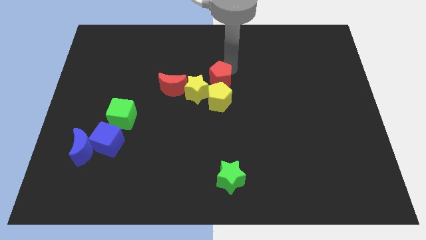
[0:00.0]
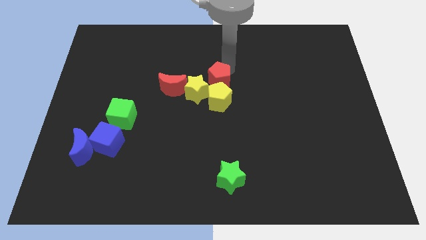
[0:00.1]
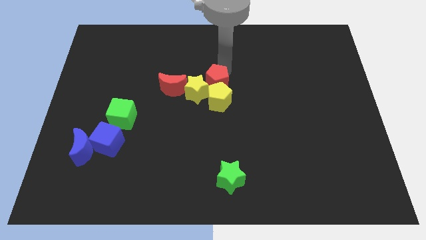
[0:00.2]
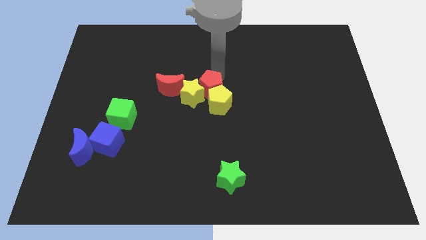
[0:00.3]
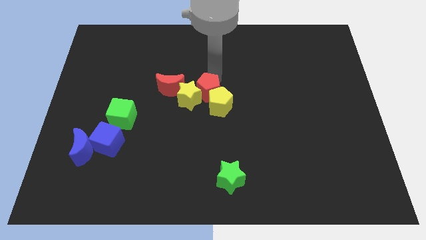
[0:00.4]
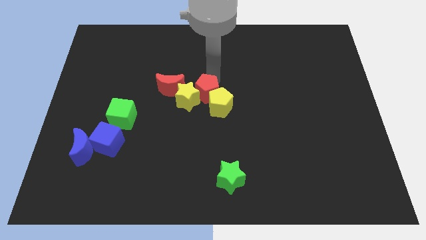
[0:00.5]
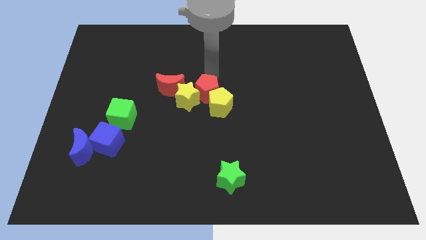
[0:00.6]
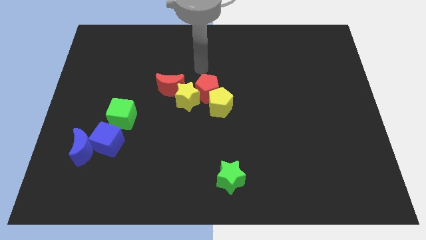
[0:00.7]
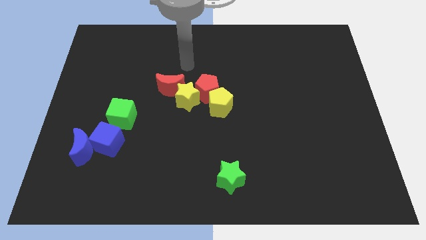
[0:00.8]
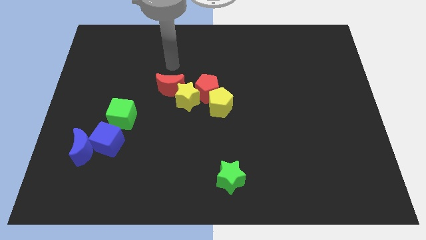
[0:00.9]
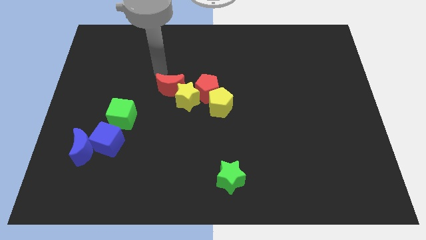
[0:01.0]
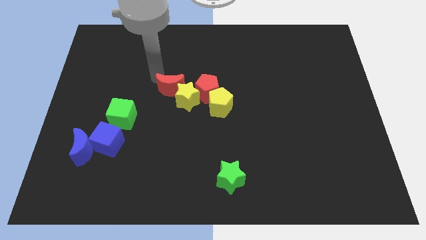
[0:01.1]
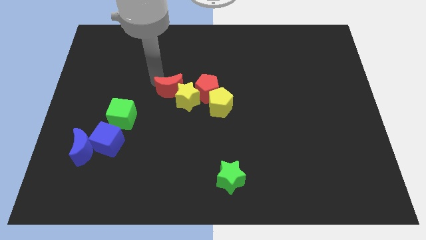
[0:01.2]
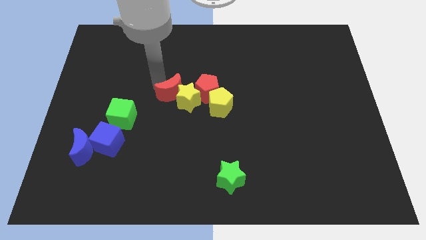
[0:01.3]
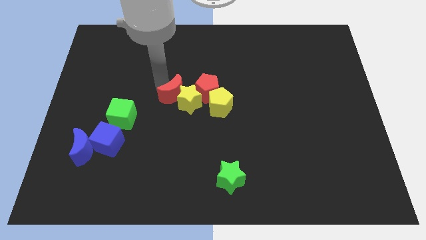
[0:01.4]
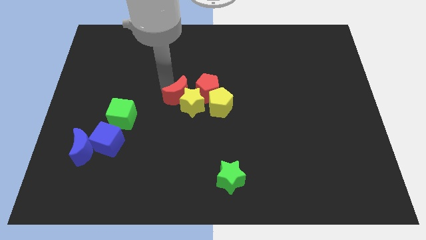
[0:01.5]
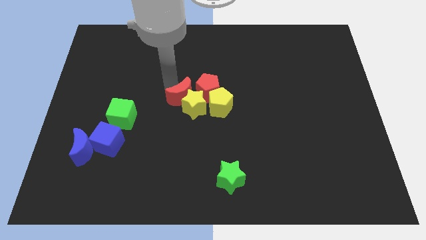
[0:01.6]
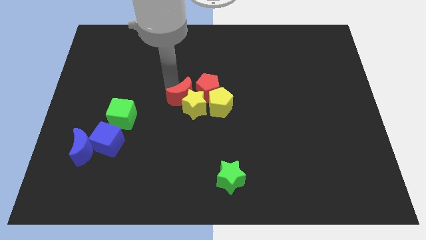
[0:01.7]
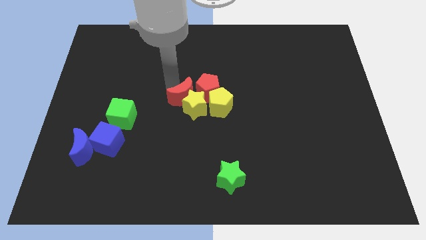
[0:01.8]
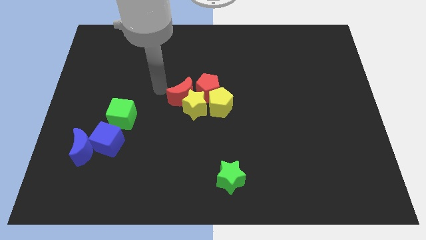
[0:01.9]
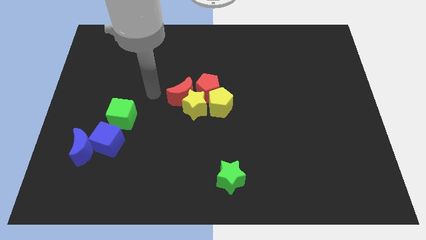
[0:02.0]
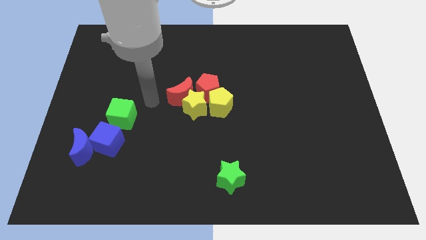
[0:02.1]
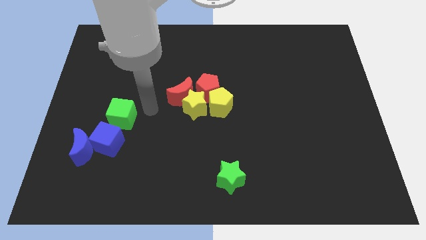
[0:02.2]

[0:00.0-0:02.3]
push the two red blocks into the two yellow blocks

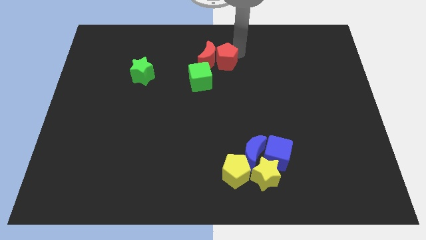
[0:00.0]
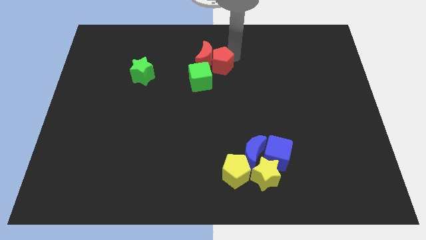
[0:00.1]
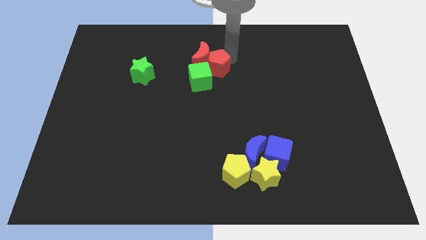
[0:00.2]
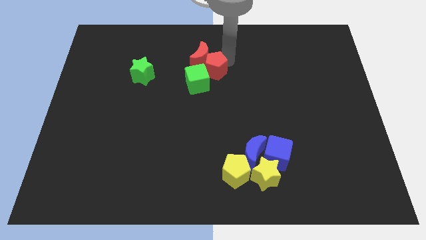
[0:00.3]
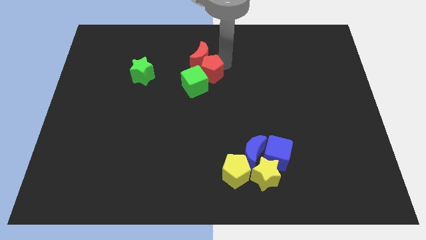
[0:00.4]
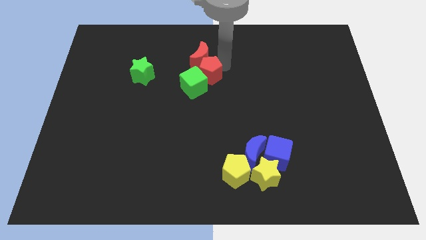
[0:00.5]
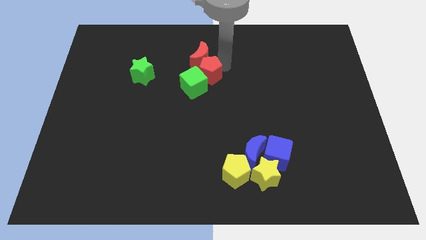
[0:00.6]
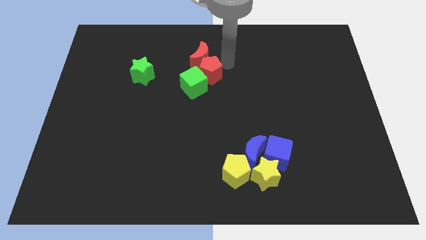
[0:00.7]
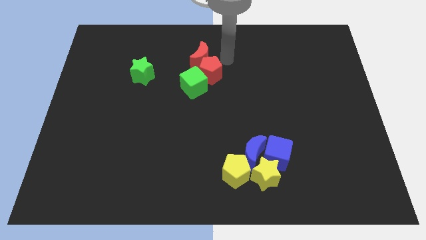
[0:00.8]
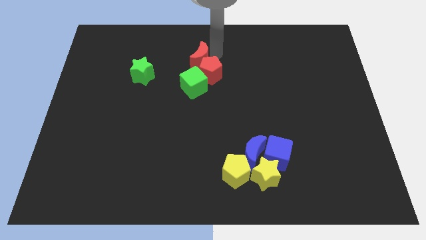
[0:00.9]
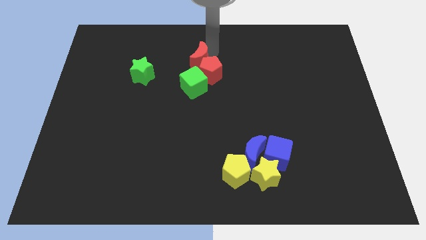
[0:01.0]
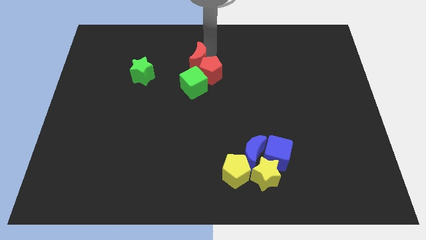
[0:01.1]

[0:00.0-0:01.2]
move the red pentagon into the green cube

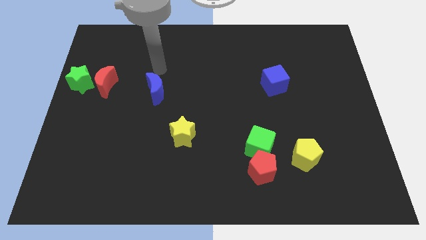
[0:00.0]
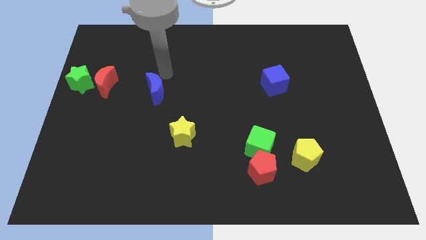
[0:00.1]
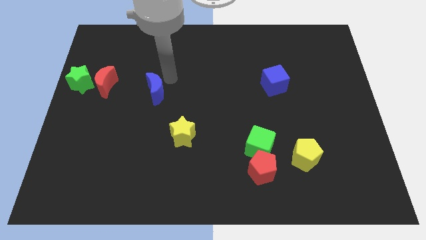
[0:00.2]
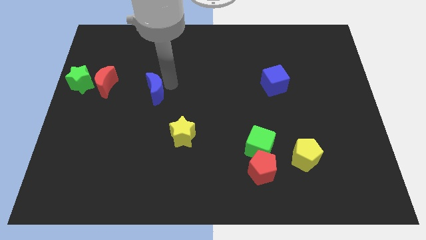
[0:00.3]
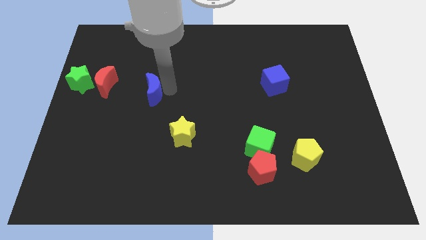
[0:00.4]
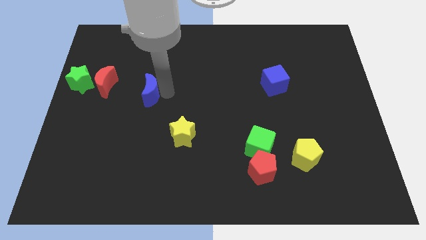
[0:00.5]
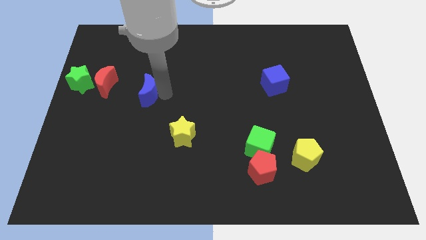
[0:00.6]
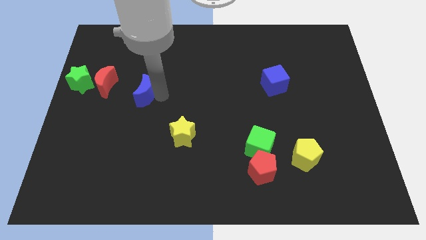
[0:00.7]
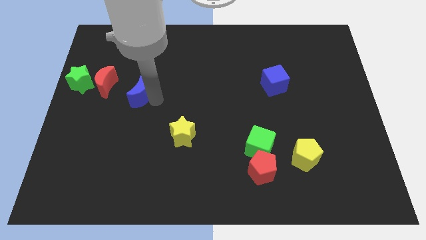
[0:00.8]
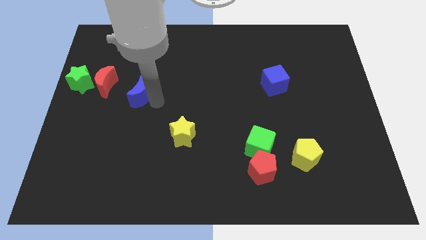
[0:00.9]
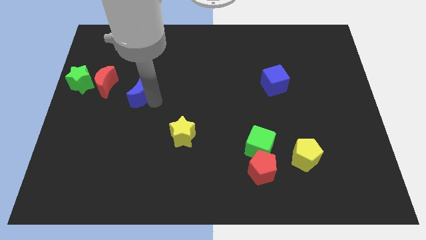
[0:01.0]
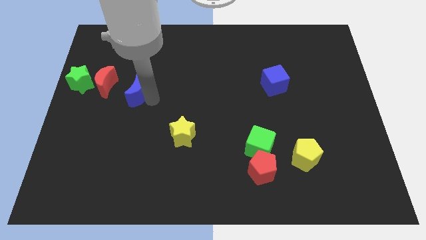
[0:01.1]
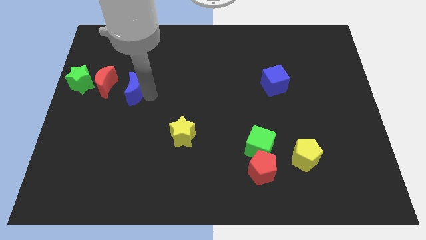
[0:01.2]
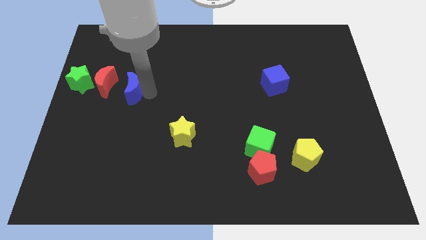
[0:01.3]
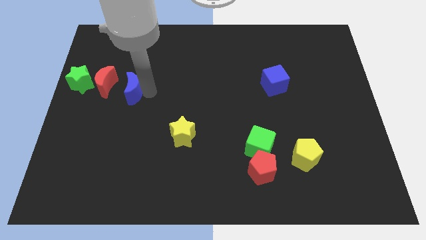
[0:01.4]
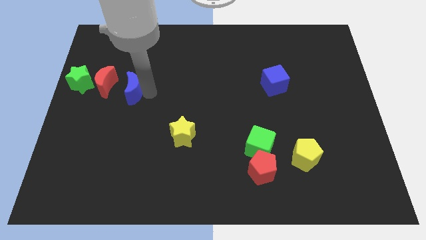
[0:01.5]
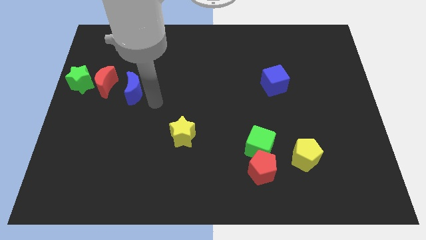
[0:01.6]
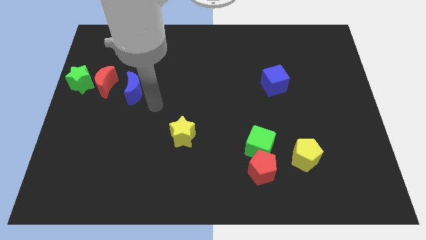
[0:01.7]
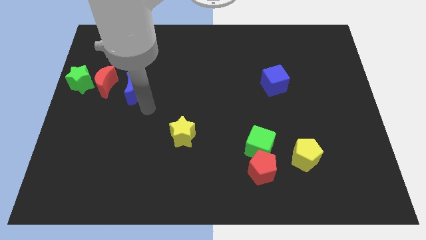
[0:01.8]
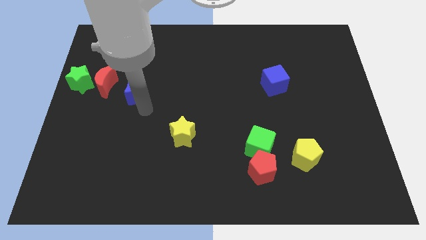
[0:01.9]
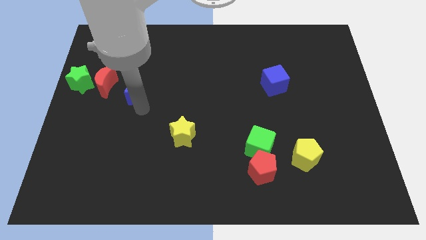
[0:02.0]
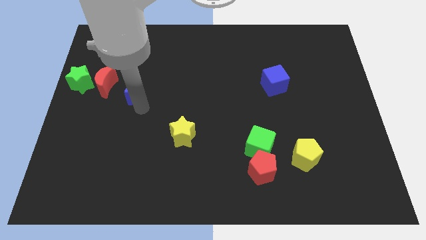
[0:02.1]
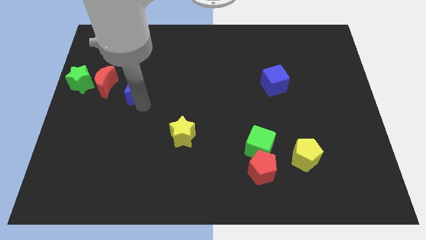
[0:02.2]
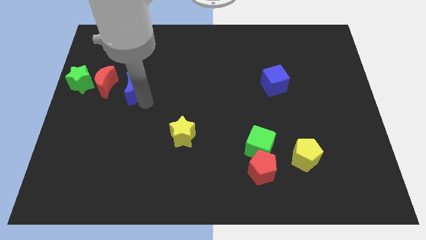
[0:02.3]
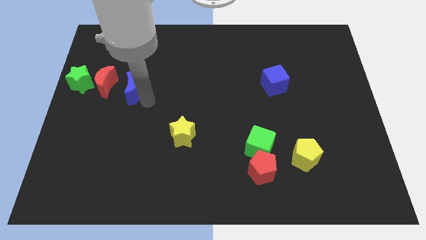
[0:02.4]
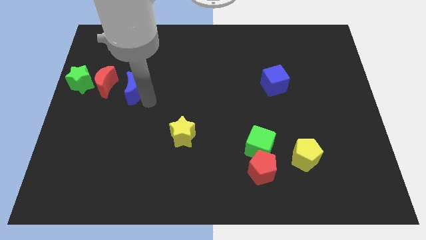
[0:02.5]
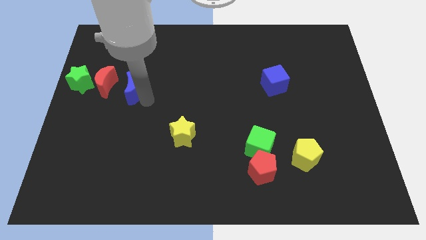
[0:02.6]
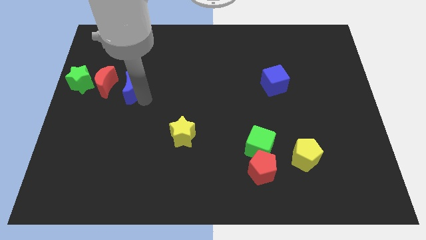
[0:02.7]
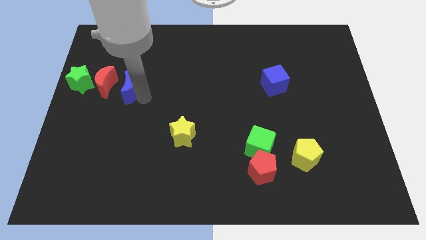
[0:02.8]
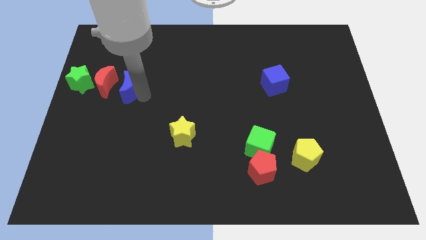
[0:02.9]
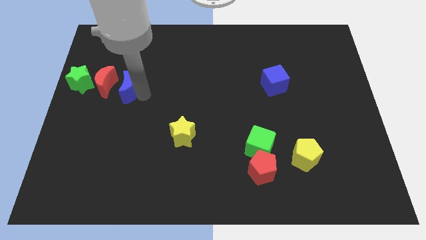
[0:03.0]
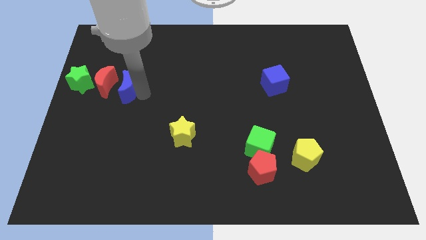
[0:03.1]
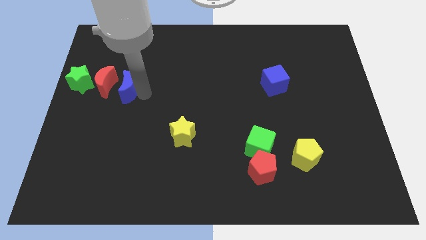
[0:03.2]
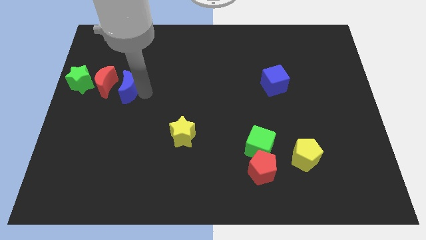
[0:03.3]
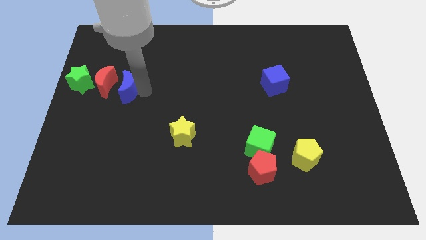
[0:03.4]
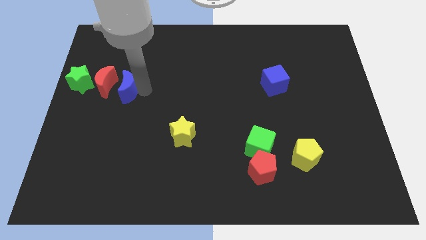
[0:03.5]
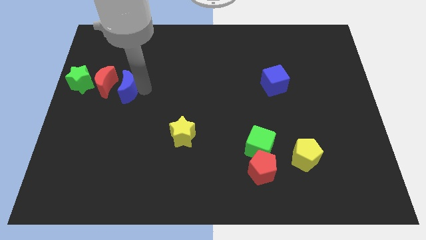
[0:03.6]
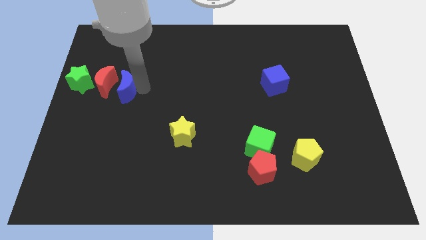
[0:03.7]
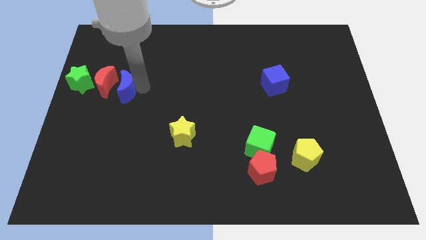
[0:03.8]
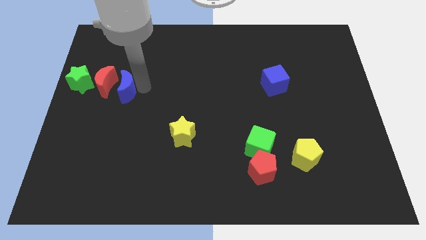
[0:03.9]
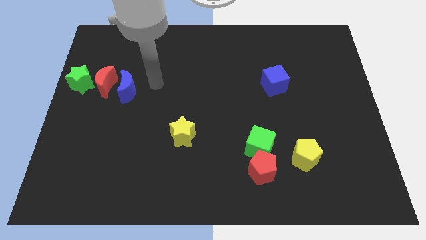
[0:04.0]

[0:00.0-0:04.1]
place blue crescent parallel to red crescent

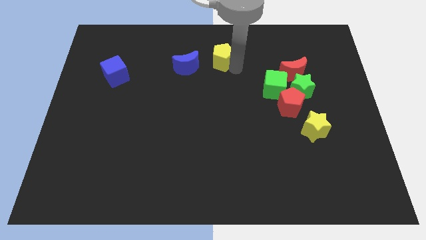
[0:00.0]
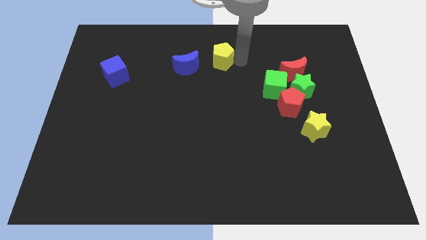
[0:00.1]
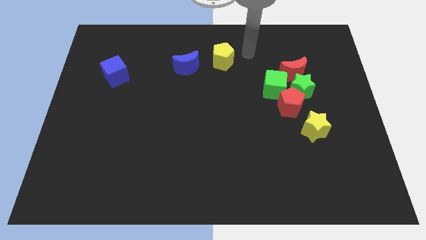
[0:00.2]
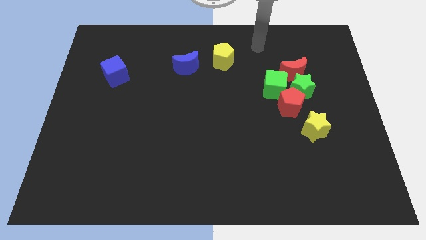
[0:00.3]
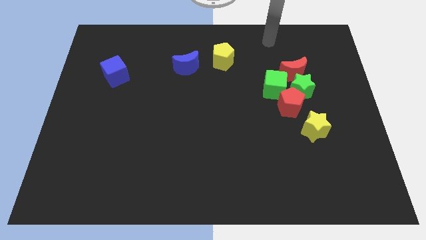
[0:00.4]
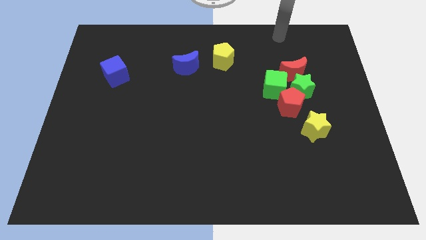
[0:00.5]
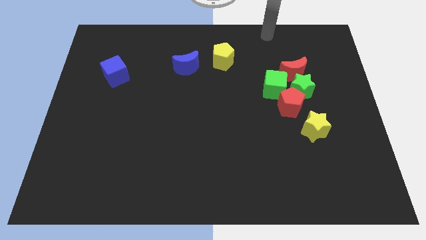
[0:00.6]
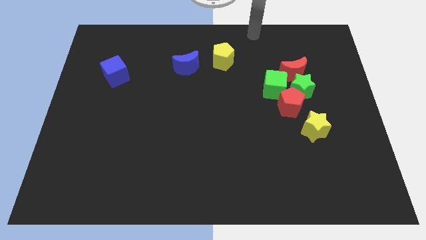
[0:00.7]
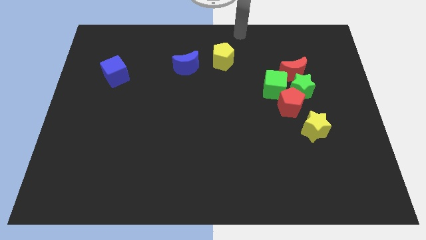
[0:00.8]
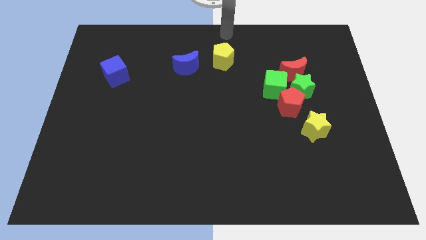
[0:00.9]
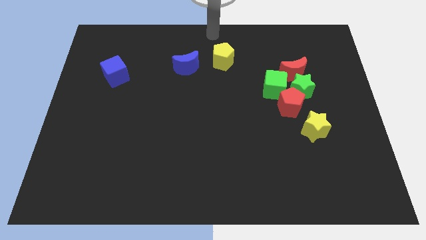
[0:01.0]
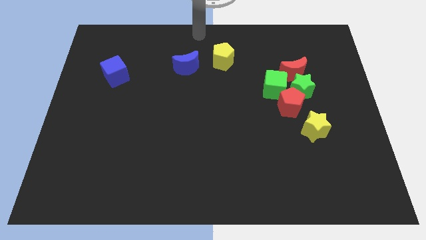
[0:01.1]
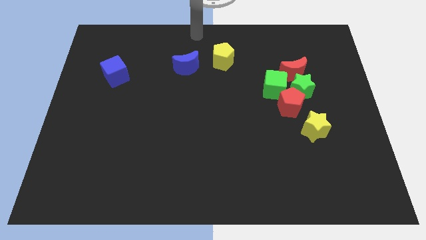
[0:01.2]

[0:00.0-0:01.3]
place your hand at the top side of the blue crescent
